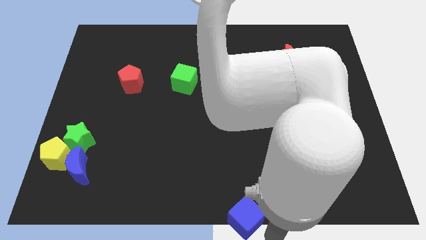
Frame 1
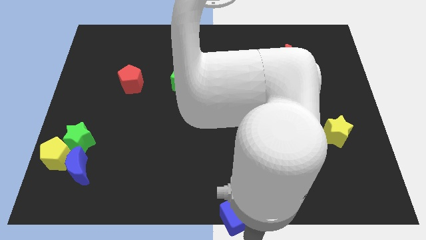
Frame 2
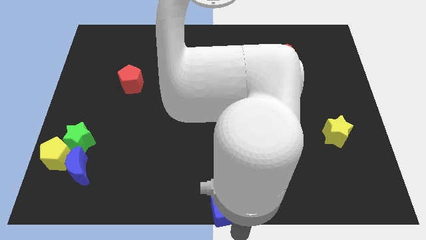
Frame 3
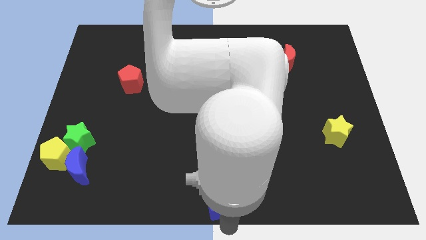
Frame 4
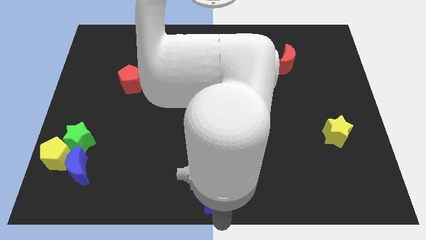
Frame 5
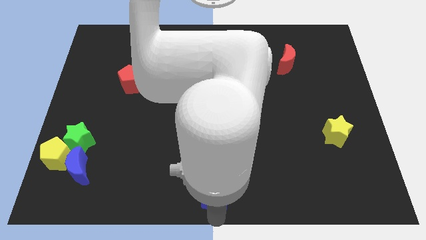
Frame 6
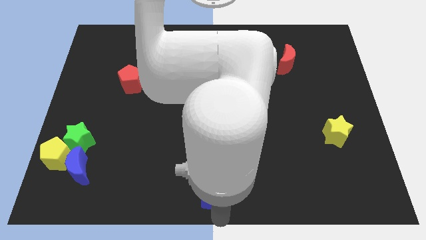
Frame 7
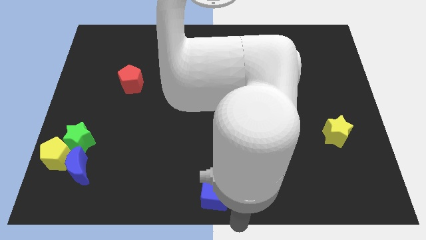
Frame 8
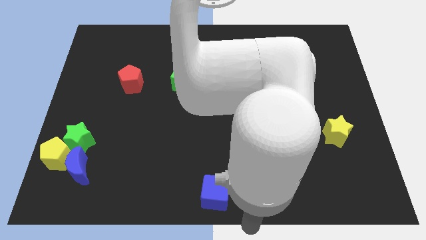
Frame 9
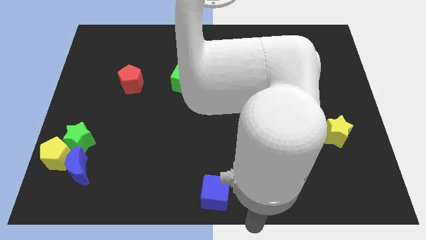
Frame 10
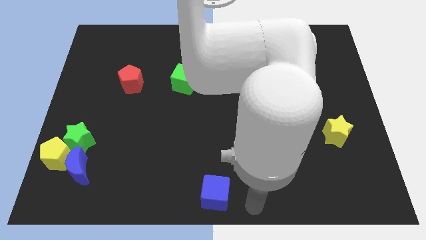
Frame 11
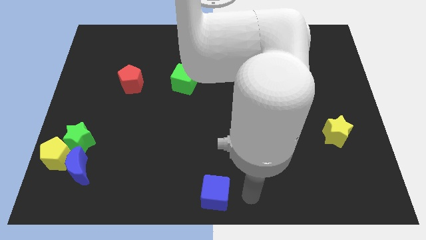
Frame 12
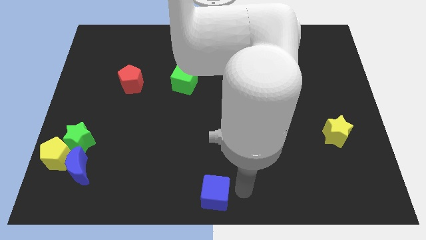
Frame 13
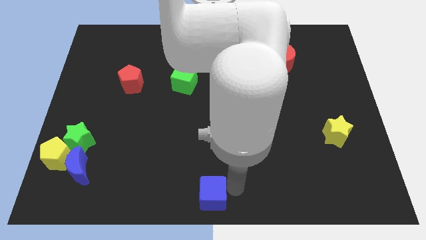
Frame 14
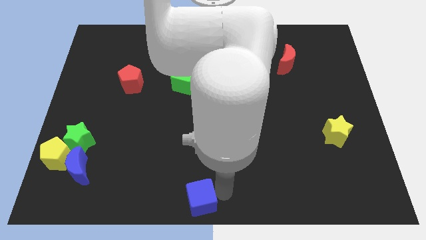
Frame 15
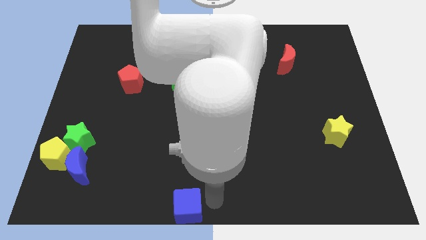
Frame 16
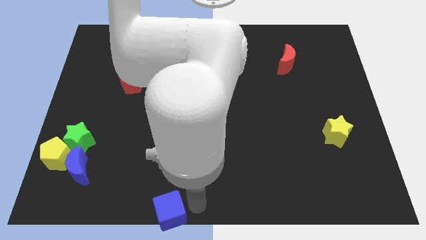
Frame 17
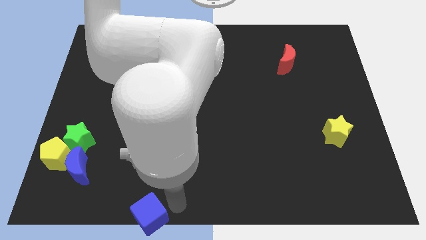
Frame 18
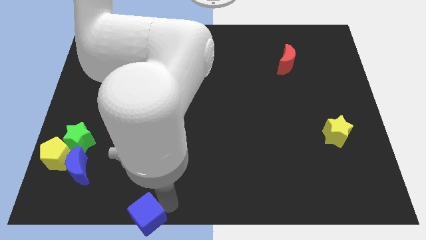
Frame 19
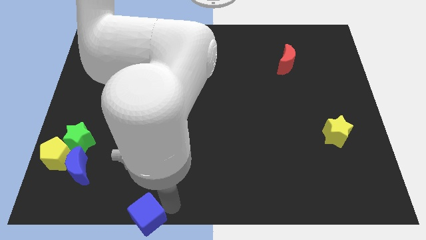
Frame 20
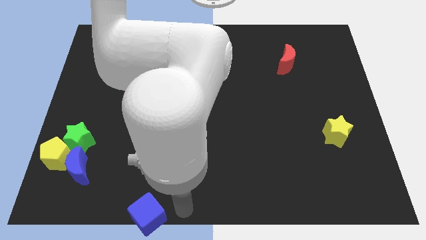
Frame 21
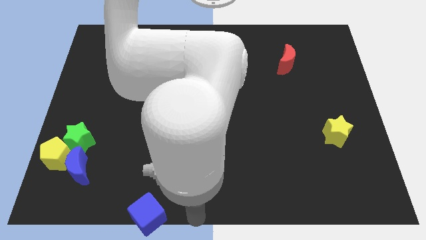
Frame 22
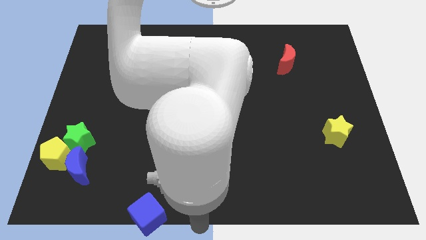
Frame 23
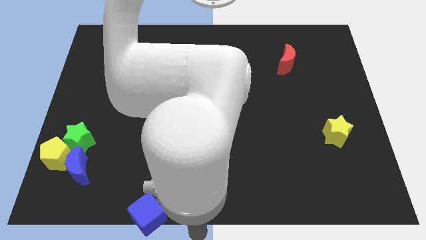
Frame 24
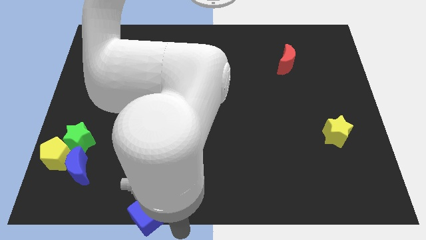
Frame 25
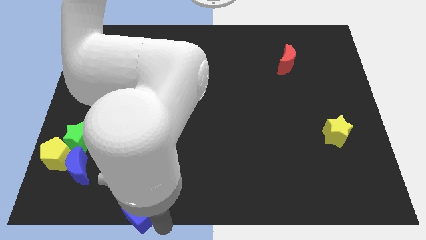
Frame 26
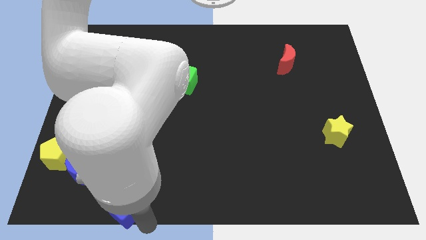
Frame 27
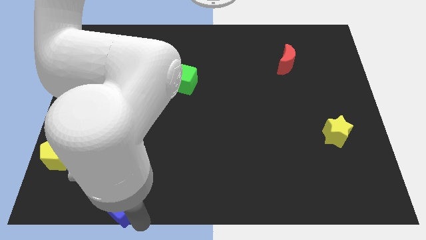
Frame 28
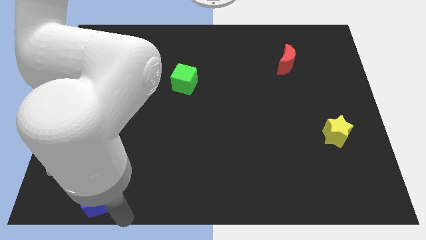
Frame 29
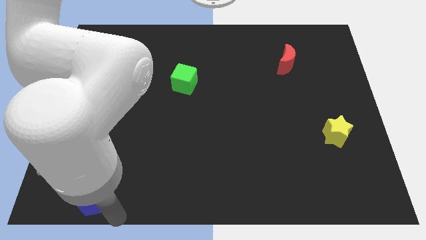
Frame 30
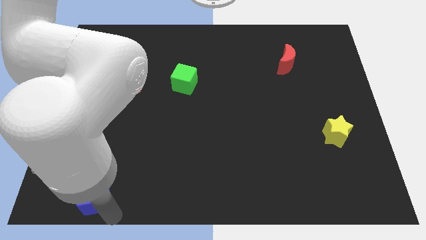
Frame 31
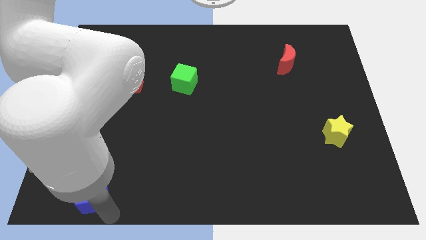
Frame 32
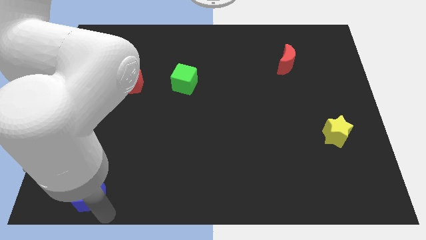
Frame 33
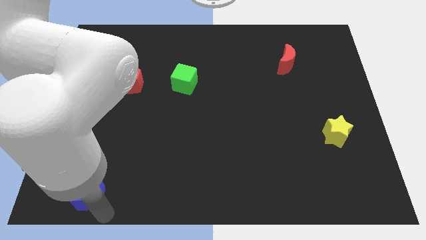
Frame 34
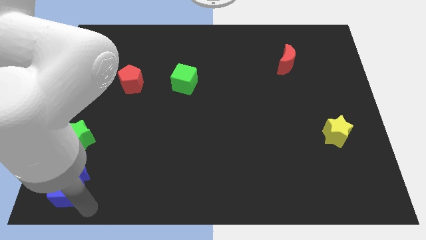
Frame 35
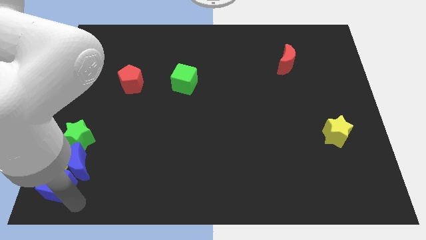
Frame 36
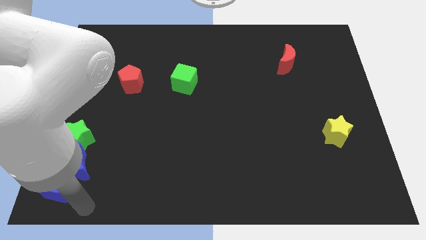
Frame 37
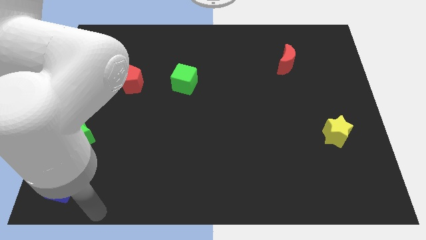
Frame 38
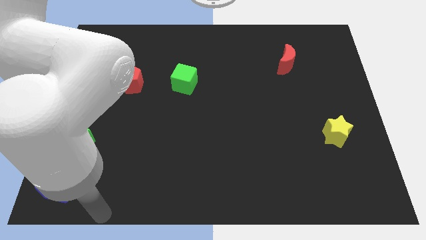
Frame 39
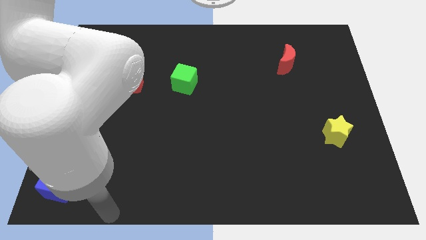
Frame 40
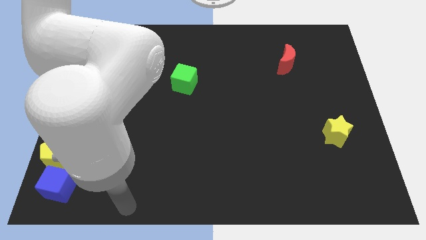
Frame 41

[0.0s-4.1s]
push the blue cube to the bottom of the yellow pentagon

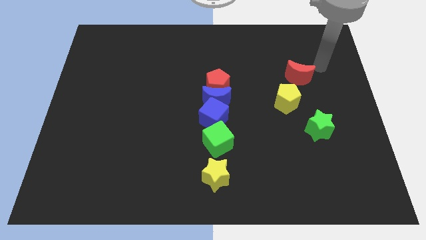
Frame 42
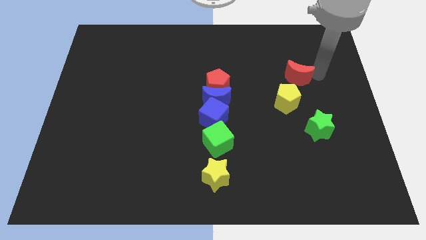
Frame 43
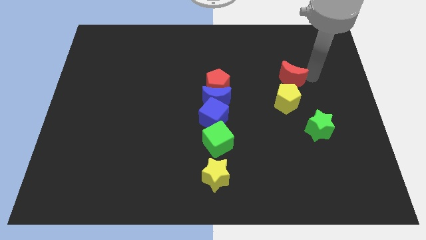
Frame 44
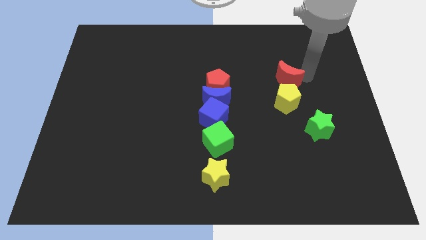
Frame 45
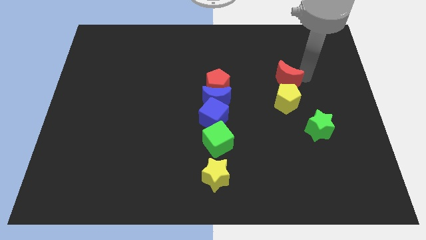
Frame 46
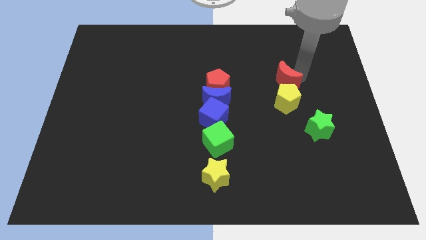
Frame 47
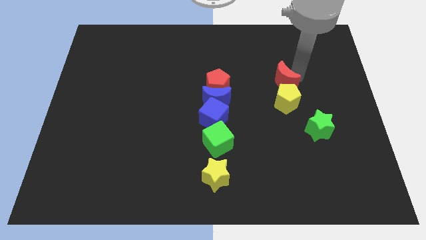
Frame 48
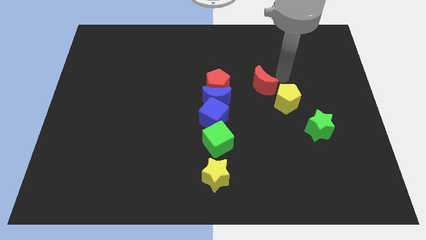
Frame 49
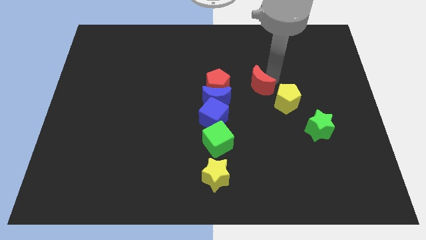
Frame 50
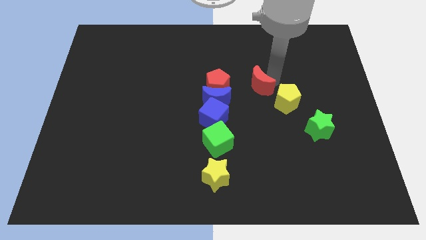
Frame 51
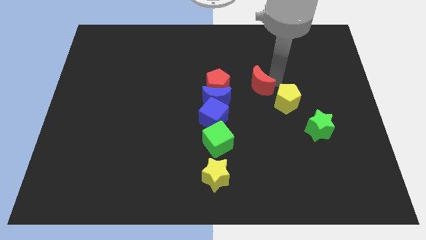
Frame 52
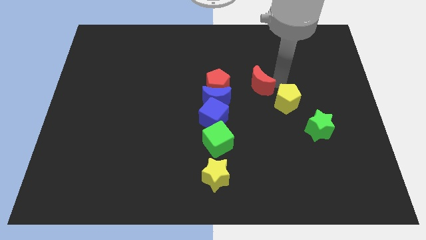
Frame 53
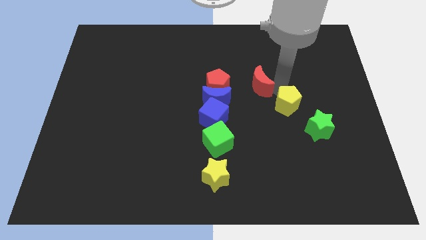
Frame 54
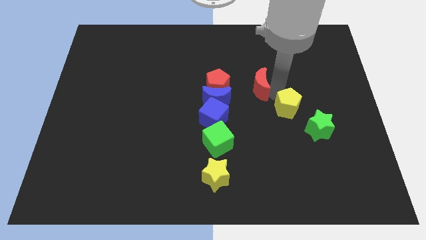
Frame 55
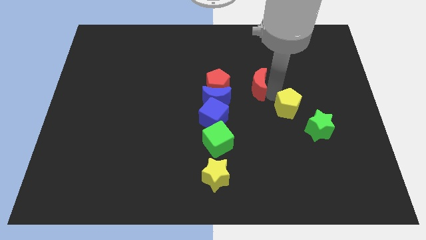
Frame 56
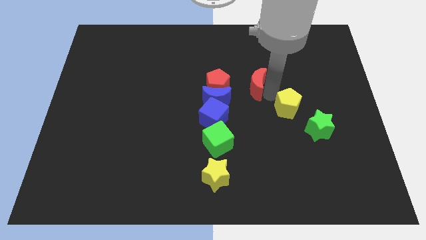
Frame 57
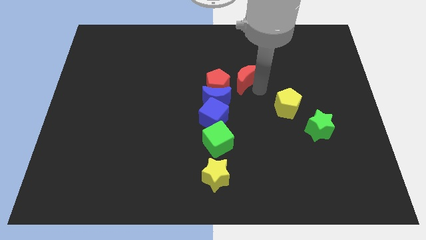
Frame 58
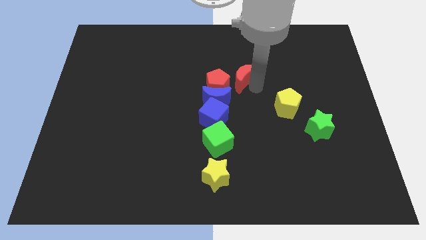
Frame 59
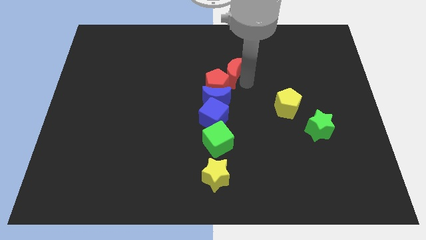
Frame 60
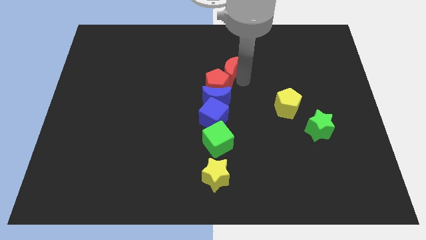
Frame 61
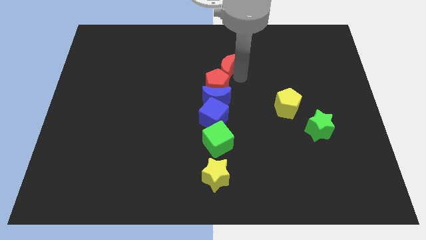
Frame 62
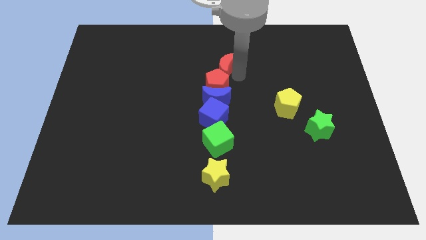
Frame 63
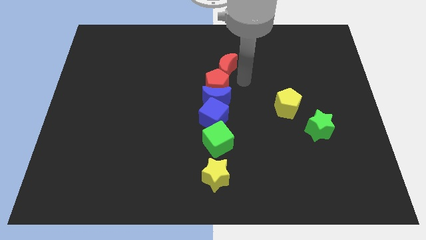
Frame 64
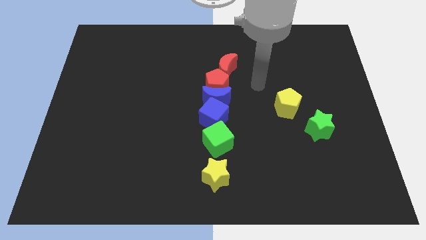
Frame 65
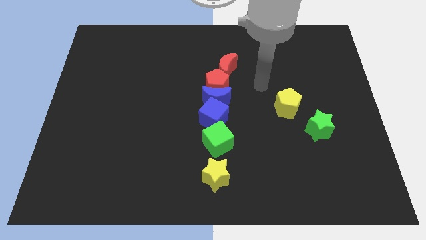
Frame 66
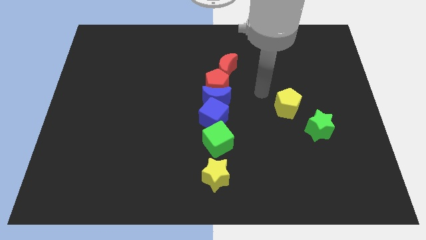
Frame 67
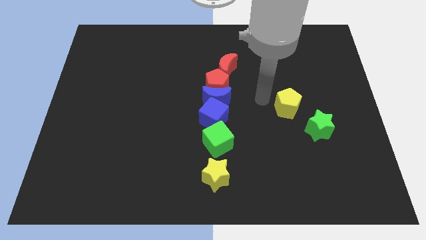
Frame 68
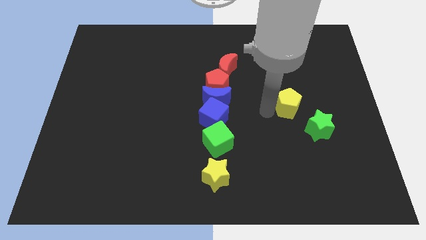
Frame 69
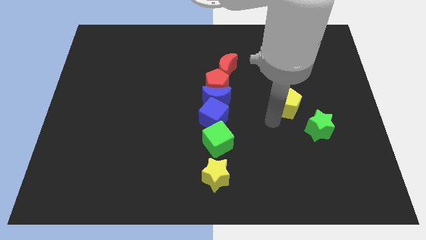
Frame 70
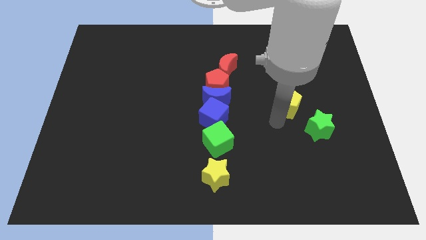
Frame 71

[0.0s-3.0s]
place the red crescent above the red pentagon

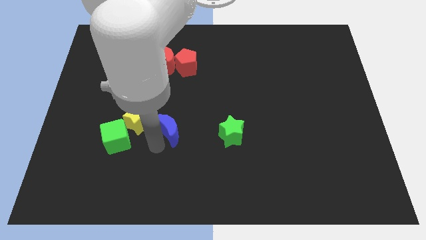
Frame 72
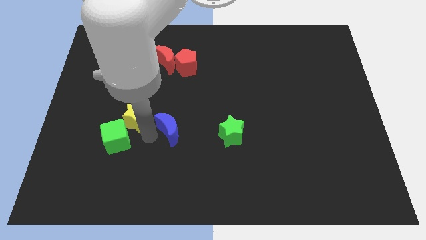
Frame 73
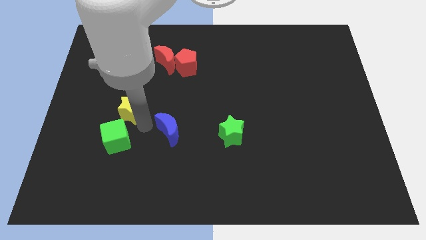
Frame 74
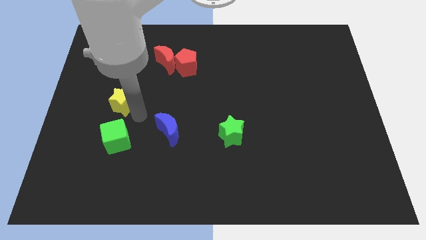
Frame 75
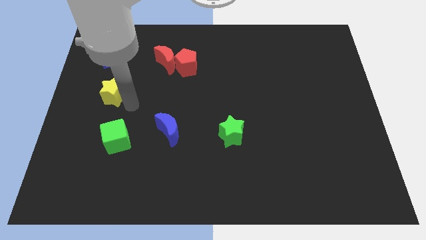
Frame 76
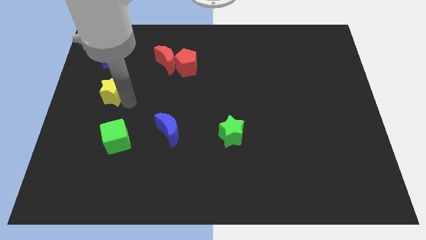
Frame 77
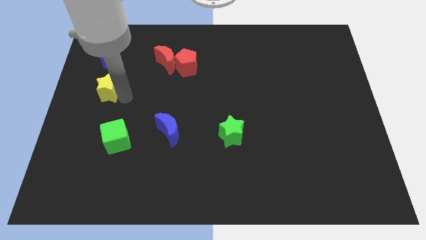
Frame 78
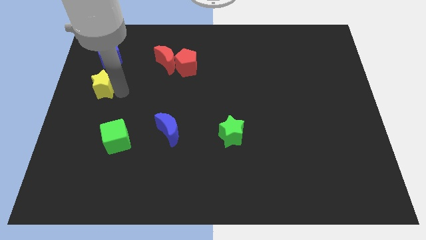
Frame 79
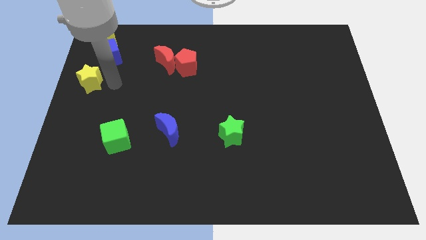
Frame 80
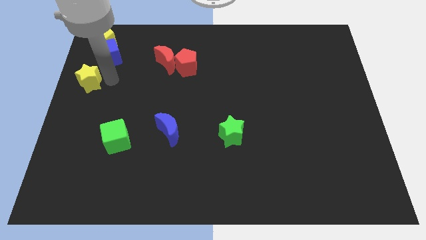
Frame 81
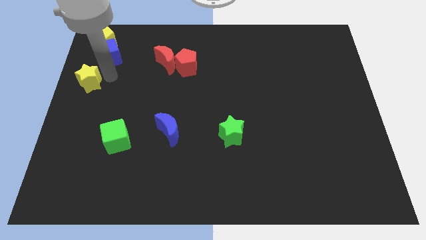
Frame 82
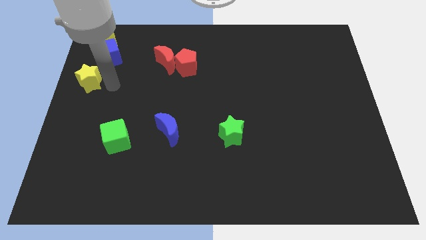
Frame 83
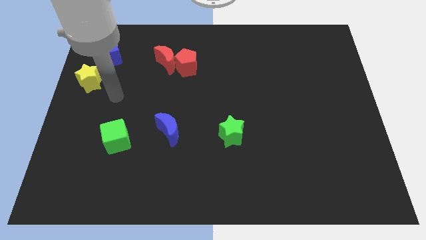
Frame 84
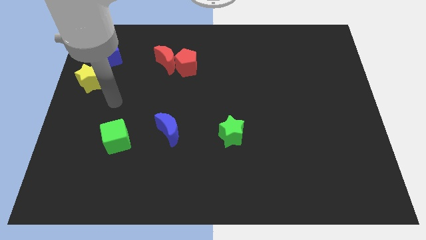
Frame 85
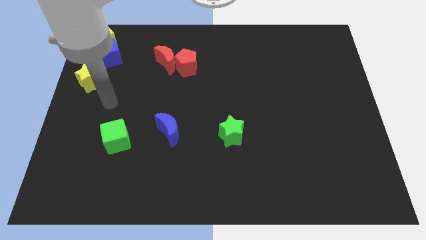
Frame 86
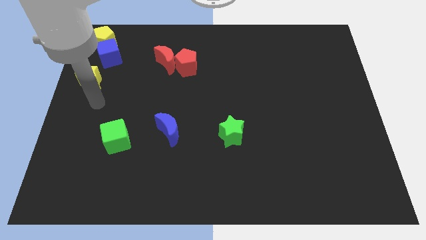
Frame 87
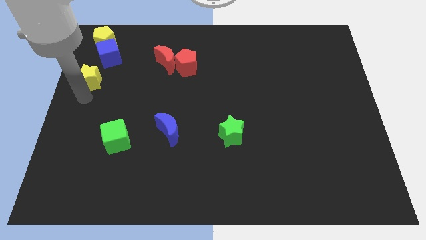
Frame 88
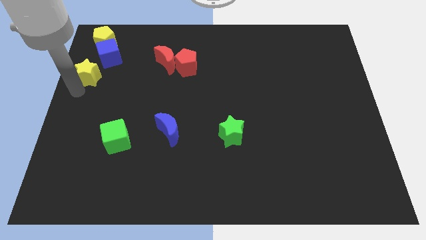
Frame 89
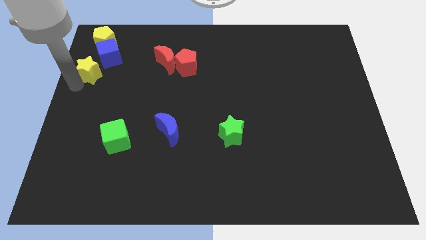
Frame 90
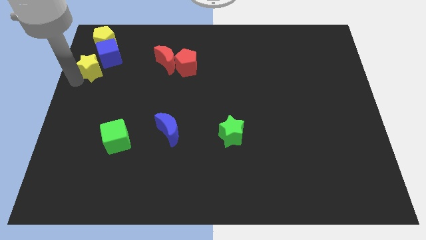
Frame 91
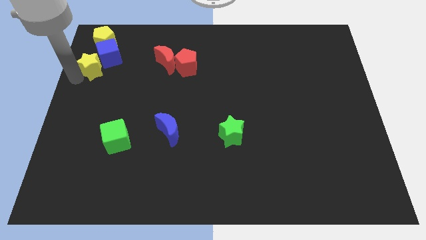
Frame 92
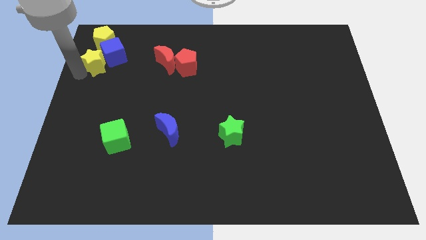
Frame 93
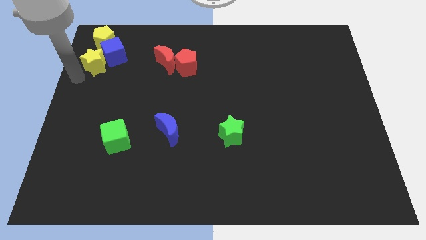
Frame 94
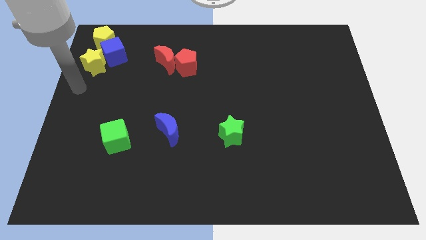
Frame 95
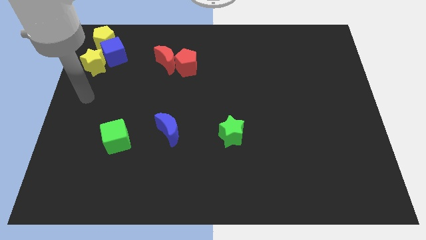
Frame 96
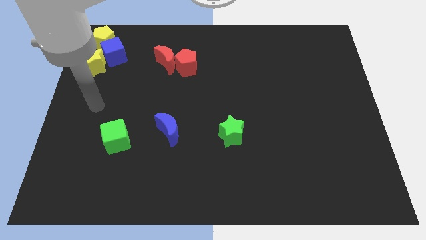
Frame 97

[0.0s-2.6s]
move the yellow star to the bottom of the yellow pentagon
